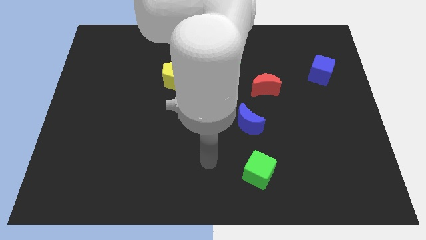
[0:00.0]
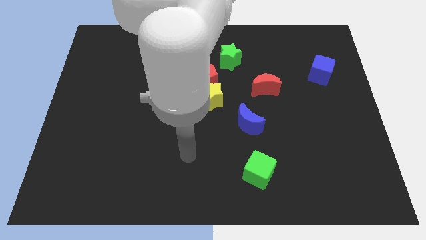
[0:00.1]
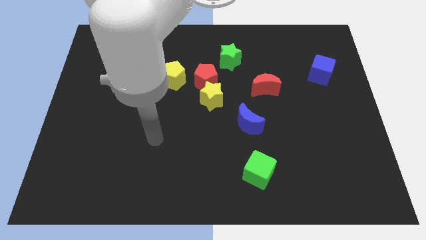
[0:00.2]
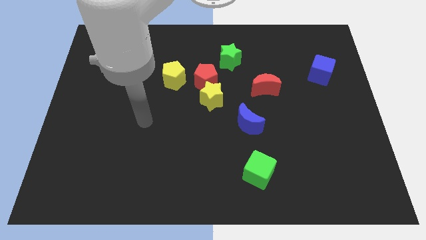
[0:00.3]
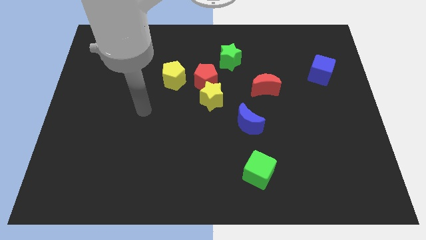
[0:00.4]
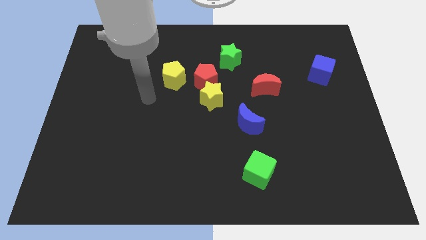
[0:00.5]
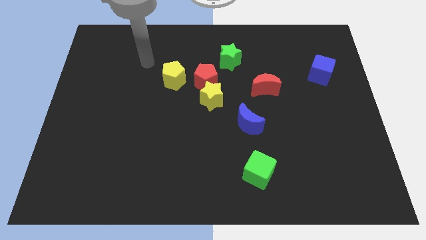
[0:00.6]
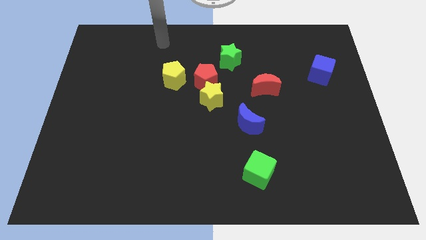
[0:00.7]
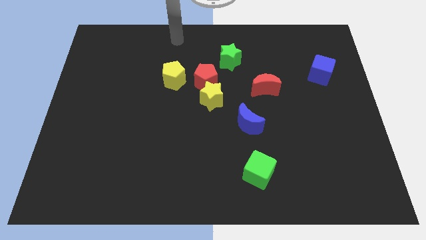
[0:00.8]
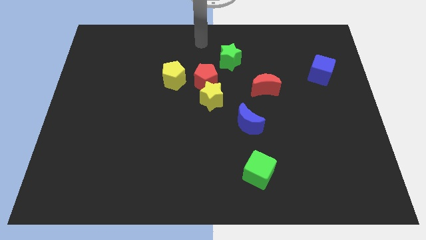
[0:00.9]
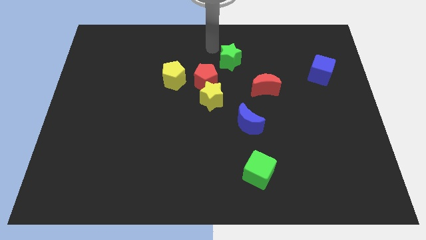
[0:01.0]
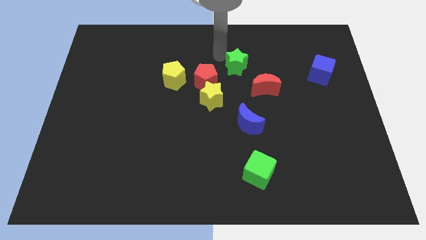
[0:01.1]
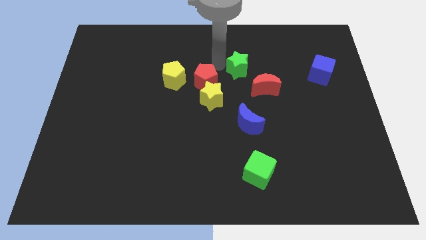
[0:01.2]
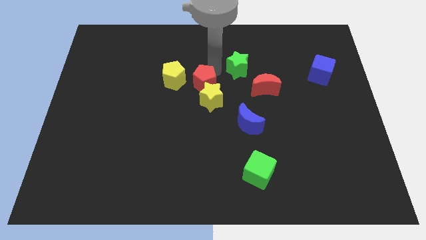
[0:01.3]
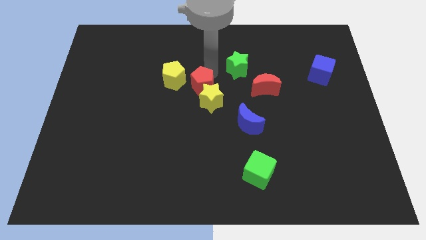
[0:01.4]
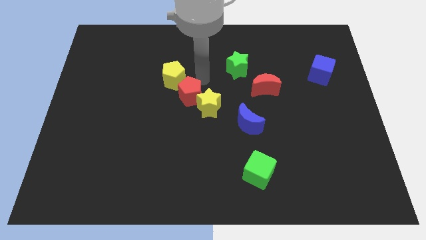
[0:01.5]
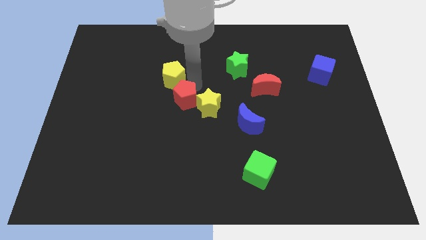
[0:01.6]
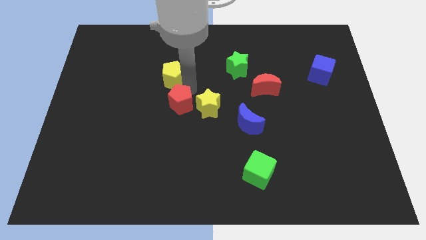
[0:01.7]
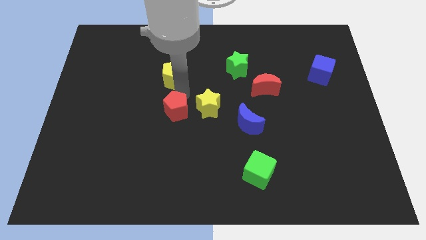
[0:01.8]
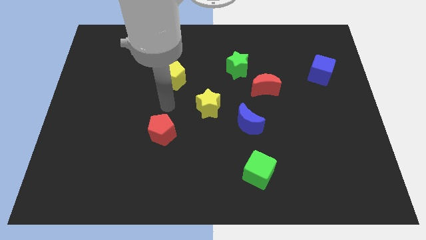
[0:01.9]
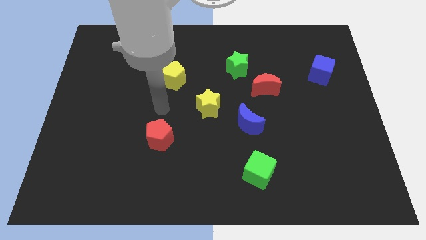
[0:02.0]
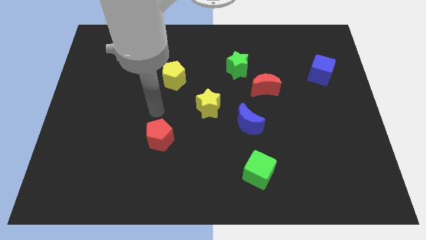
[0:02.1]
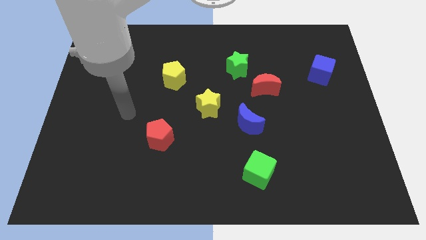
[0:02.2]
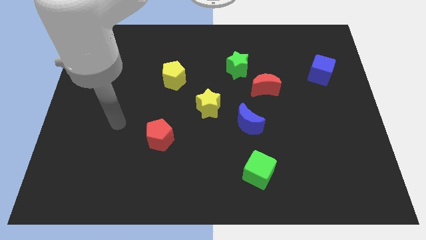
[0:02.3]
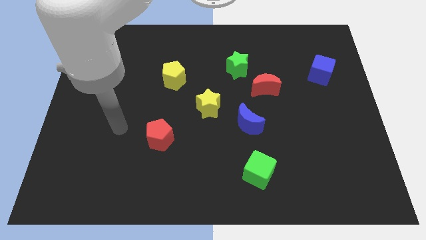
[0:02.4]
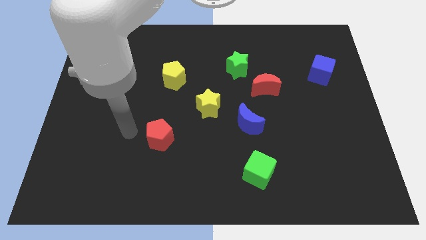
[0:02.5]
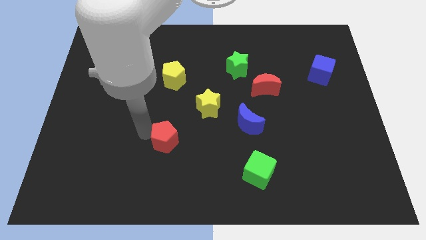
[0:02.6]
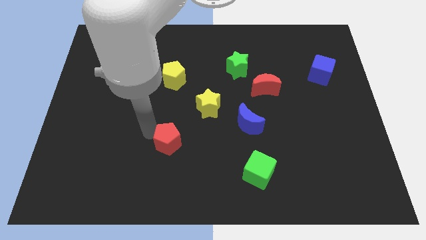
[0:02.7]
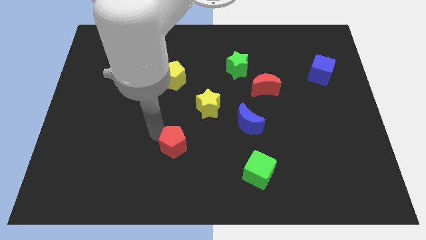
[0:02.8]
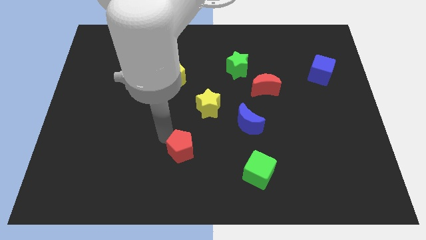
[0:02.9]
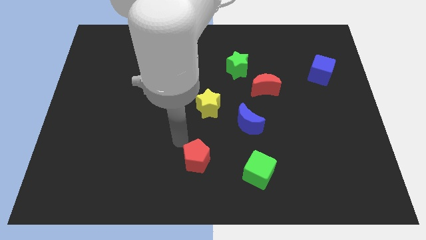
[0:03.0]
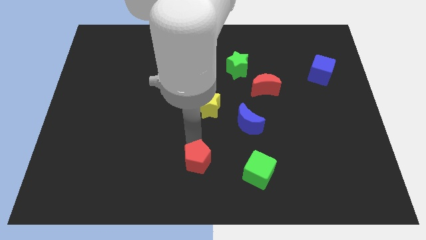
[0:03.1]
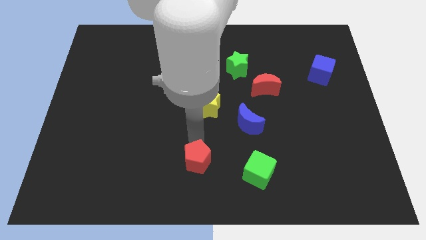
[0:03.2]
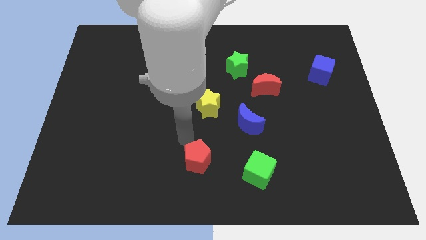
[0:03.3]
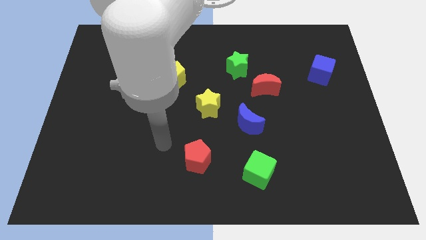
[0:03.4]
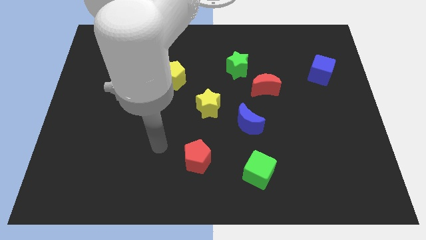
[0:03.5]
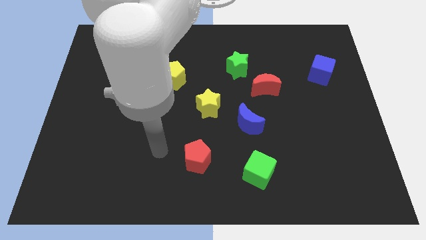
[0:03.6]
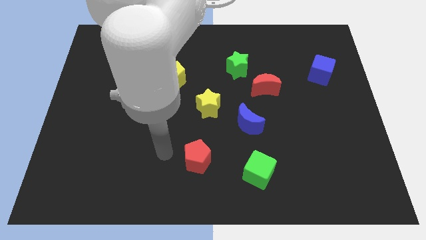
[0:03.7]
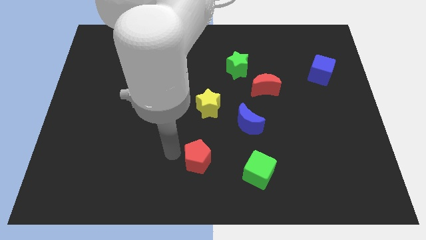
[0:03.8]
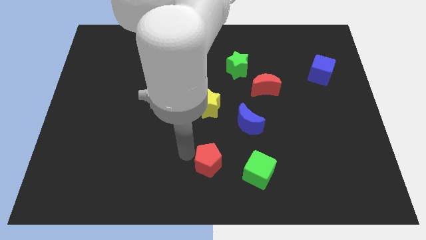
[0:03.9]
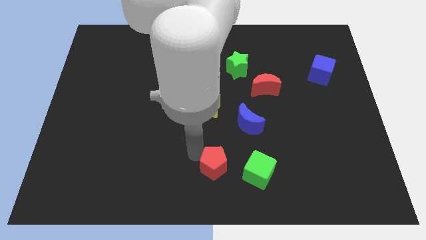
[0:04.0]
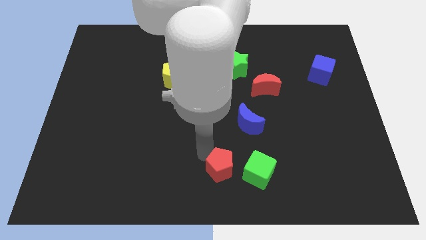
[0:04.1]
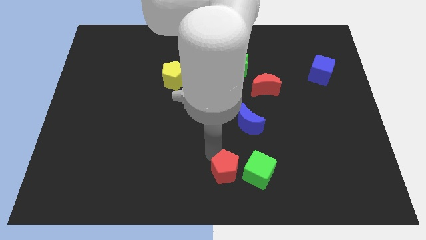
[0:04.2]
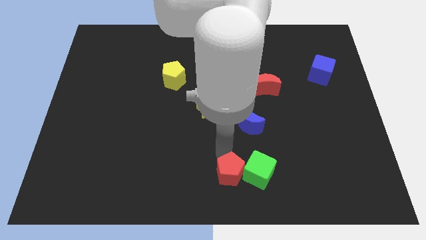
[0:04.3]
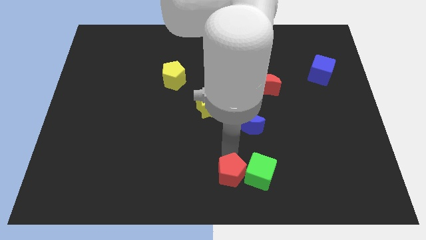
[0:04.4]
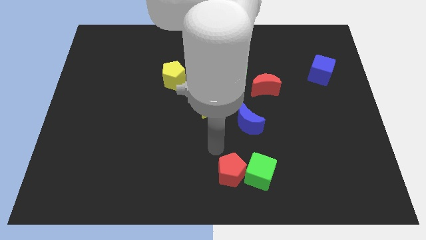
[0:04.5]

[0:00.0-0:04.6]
slide the red pentagon close to the green cube

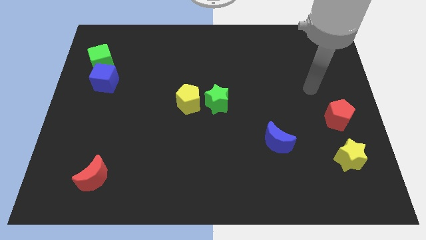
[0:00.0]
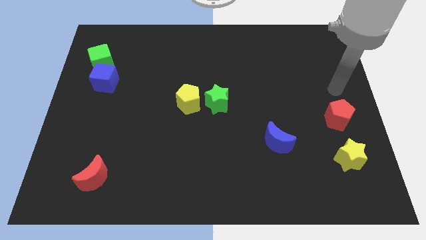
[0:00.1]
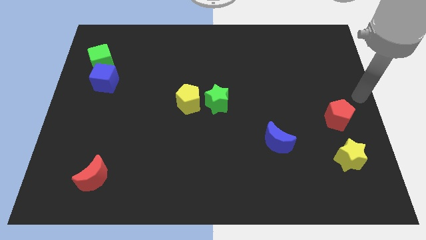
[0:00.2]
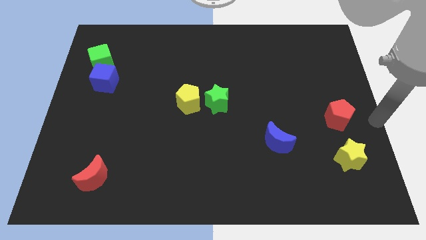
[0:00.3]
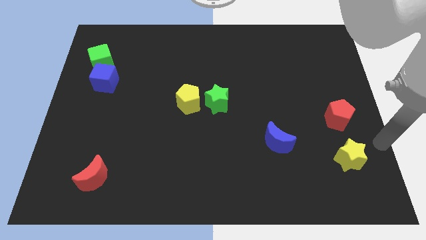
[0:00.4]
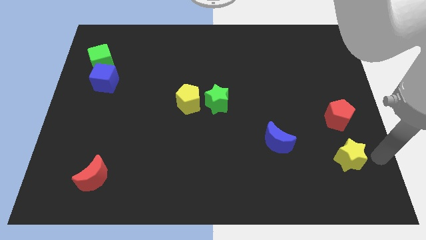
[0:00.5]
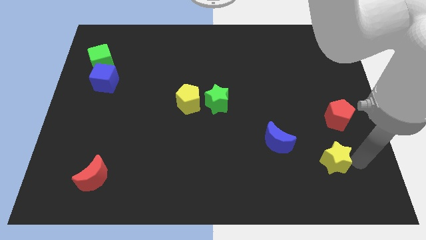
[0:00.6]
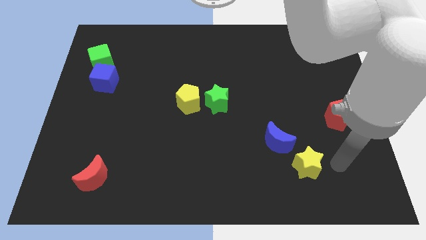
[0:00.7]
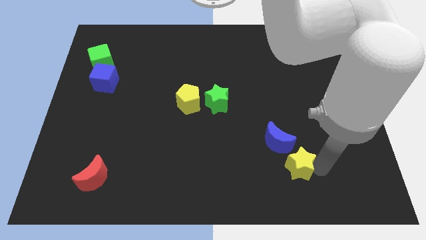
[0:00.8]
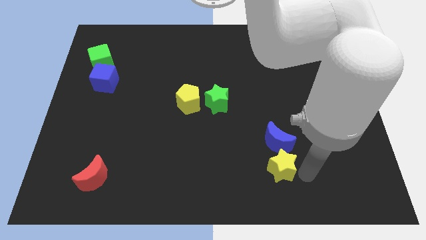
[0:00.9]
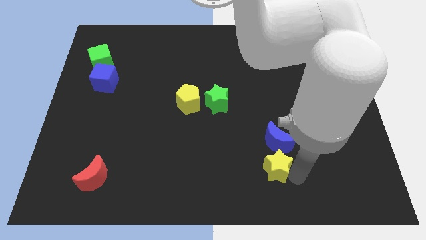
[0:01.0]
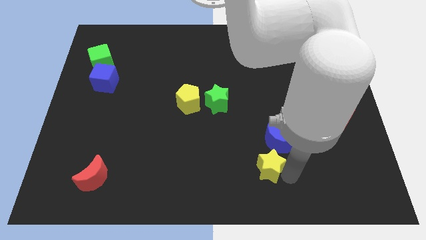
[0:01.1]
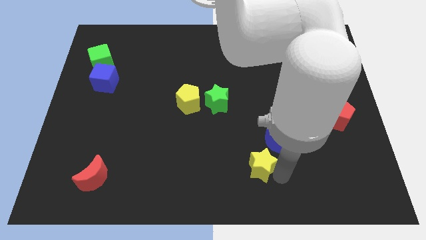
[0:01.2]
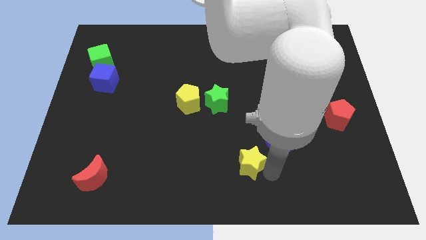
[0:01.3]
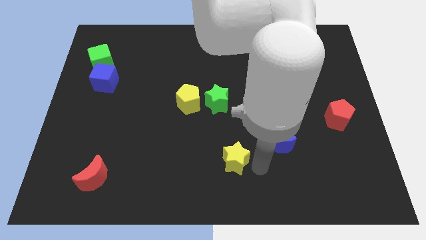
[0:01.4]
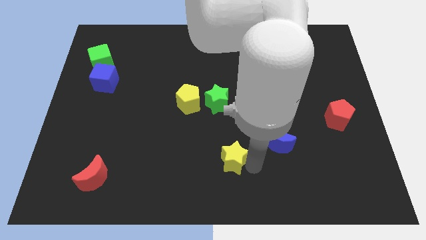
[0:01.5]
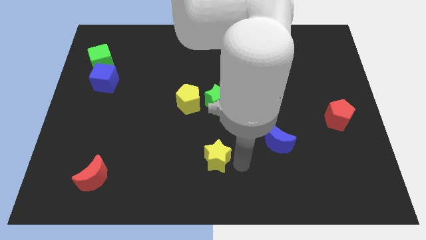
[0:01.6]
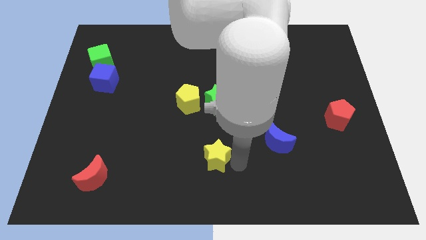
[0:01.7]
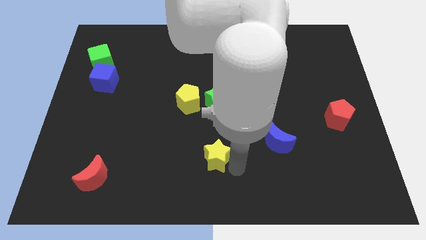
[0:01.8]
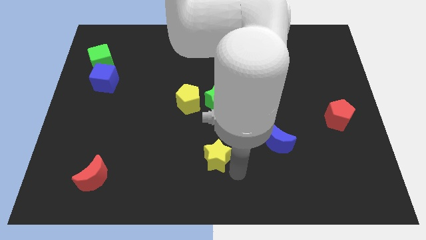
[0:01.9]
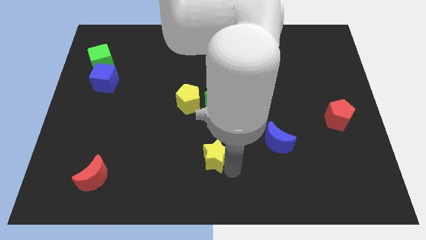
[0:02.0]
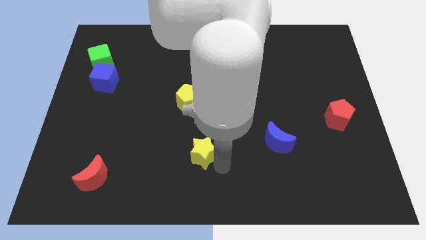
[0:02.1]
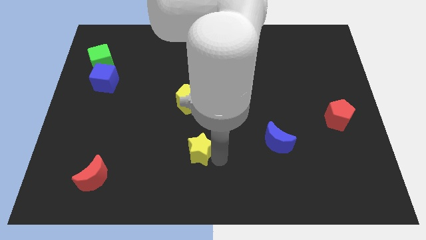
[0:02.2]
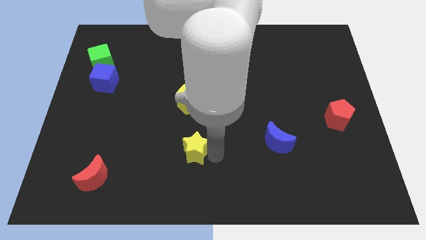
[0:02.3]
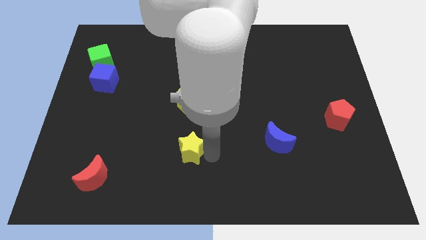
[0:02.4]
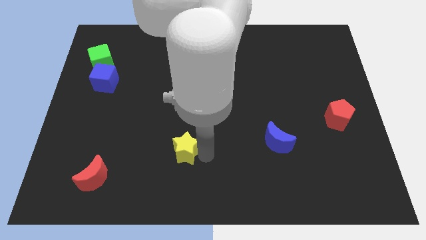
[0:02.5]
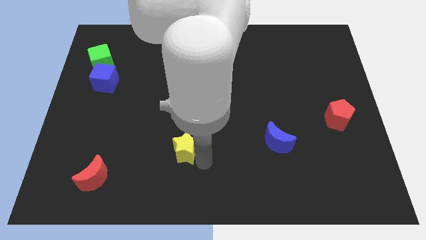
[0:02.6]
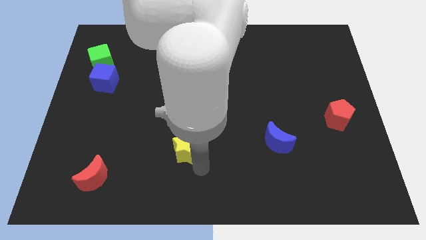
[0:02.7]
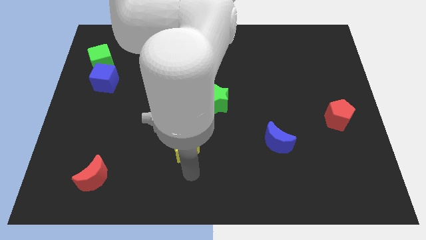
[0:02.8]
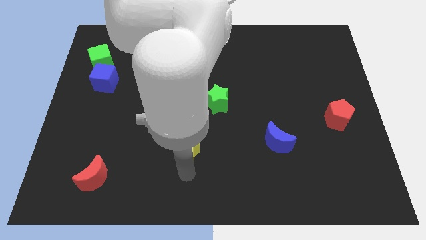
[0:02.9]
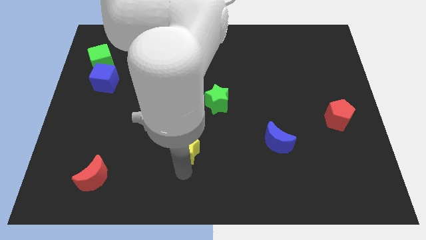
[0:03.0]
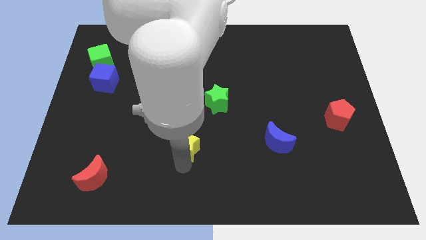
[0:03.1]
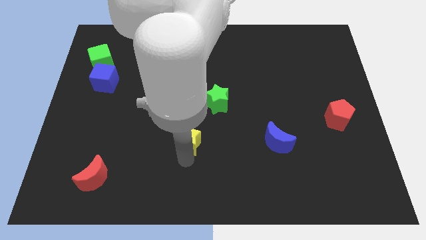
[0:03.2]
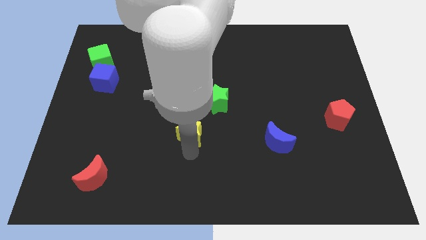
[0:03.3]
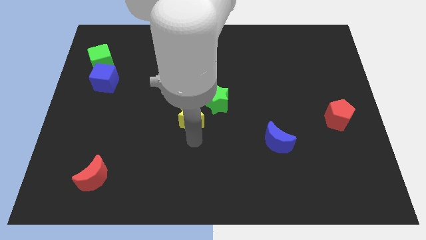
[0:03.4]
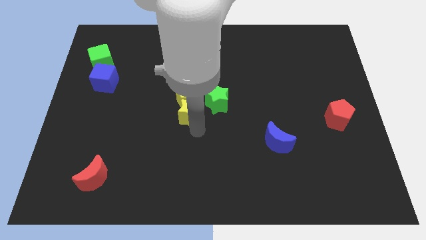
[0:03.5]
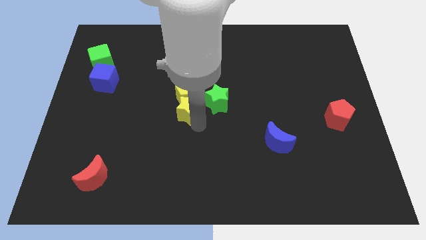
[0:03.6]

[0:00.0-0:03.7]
put the yellow star close to the yellow pentagon

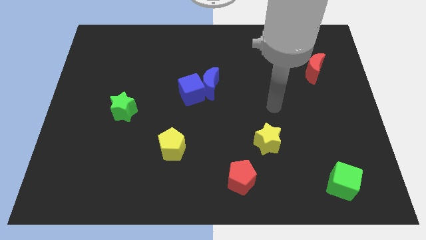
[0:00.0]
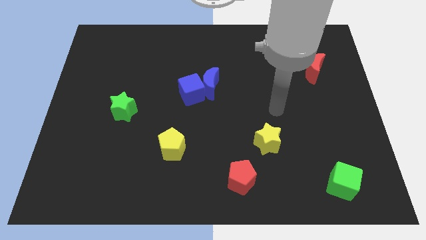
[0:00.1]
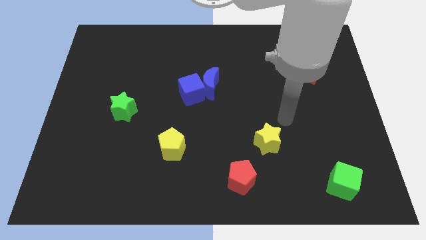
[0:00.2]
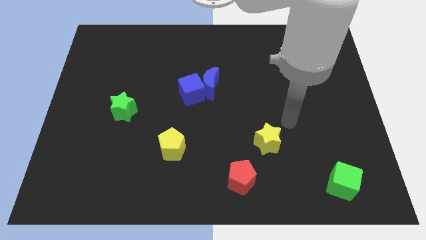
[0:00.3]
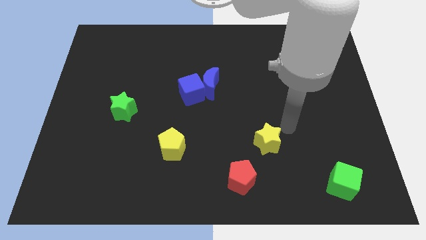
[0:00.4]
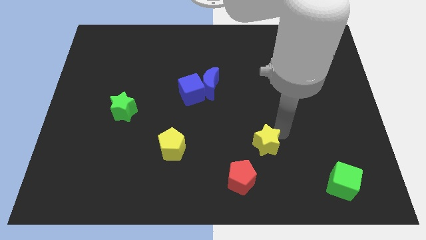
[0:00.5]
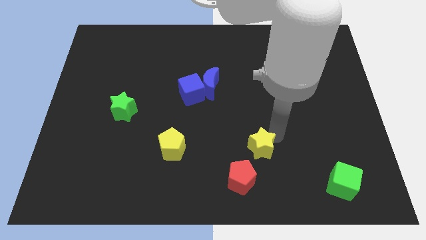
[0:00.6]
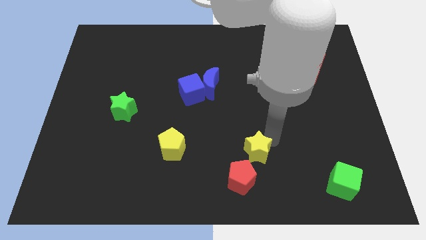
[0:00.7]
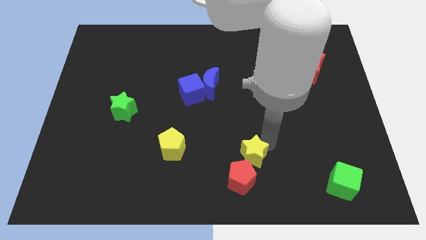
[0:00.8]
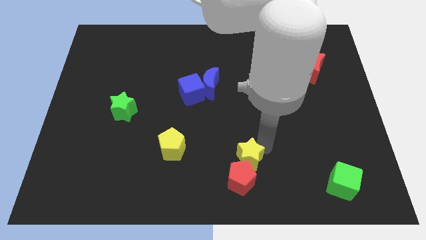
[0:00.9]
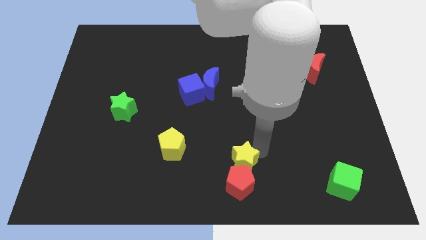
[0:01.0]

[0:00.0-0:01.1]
slide the yellow star next to the red pentagon
